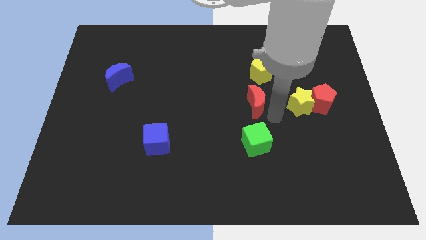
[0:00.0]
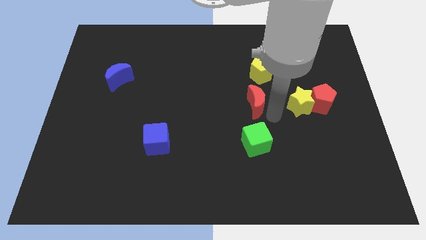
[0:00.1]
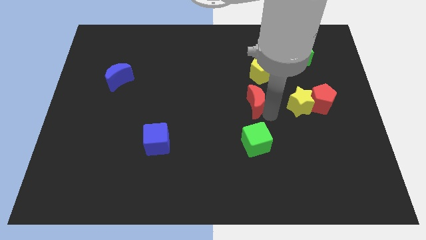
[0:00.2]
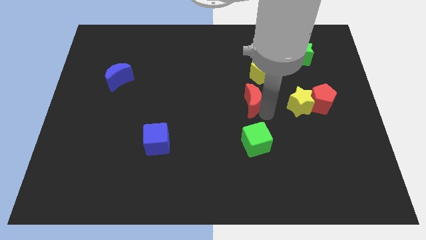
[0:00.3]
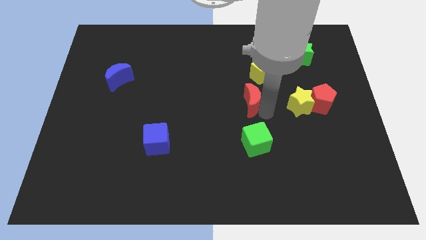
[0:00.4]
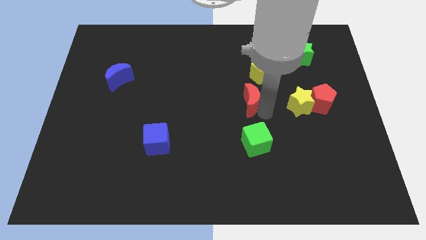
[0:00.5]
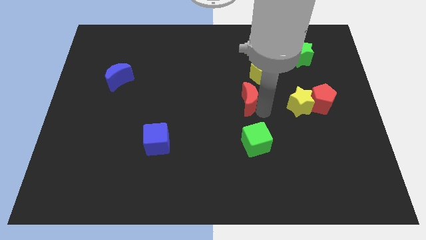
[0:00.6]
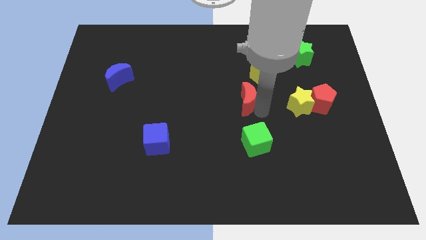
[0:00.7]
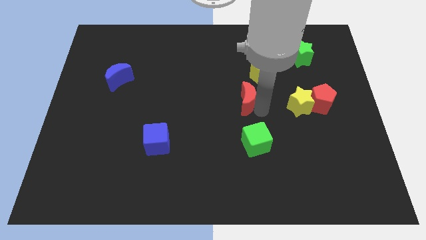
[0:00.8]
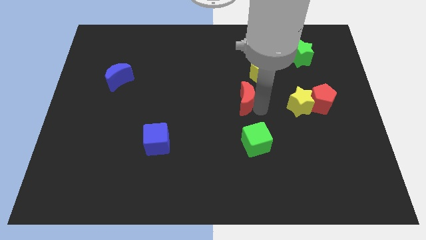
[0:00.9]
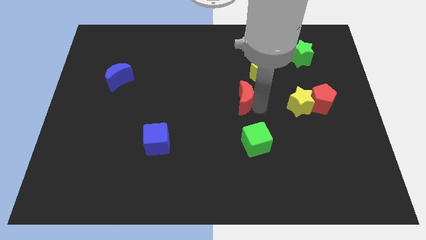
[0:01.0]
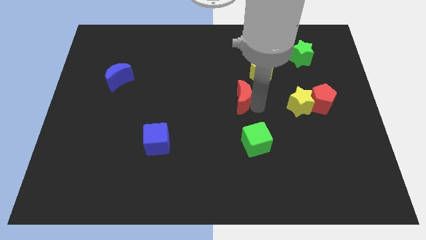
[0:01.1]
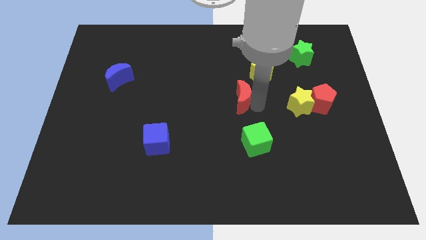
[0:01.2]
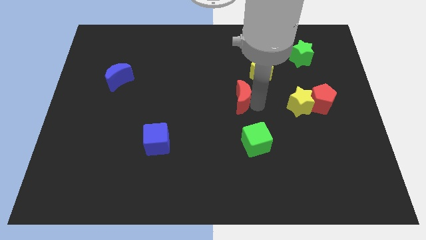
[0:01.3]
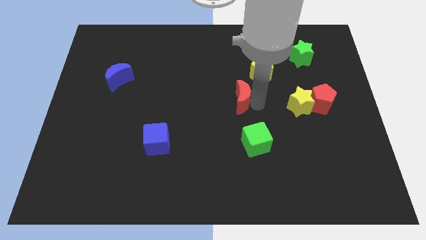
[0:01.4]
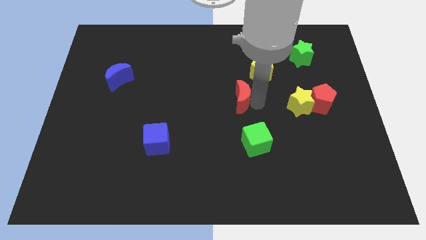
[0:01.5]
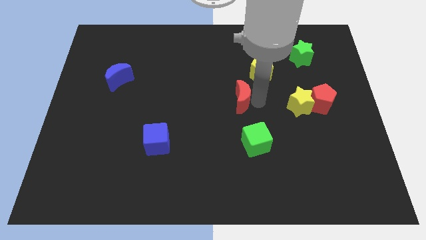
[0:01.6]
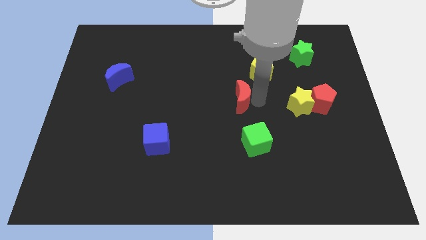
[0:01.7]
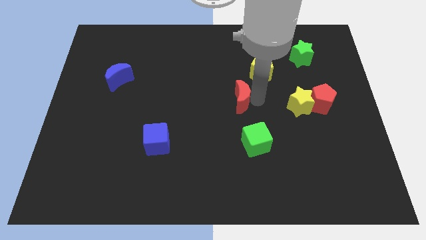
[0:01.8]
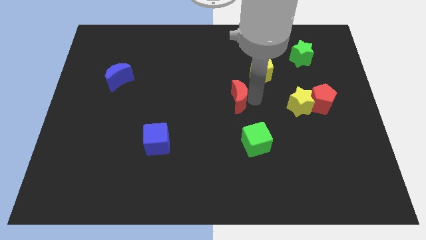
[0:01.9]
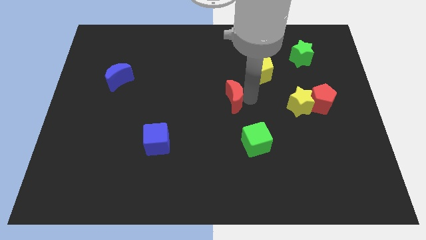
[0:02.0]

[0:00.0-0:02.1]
push the red moon slightly to the left side of the board

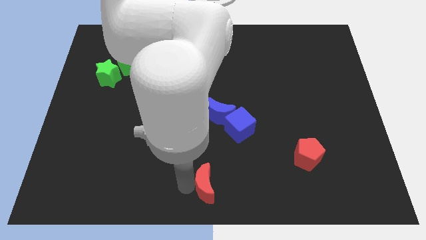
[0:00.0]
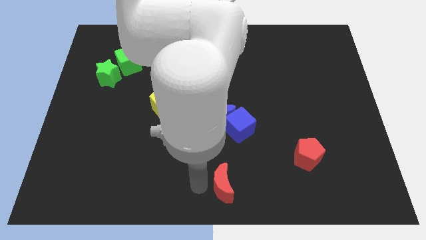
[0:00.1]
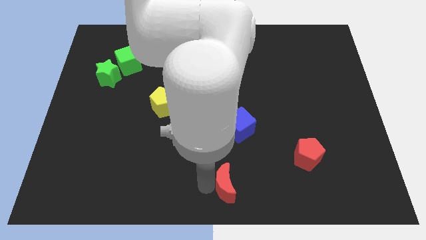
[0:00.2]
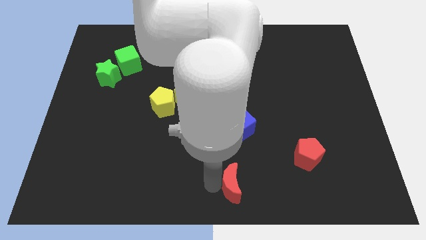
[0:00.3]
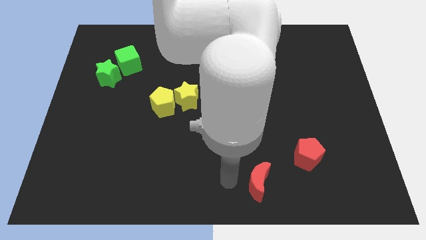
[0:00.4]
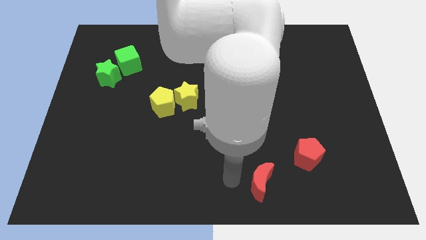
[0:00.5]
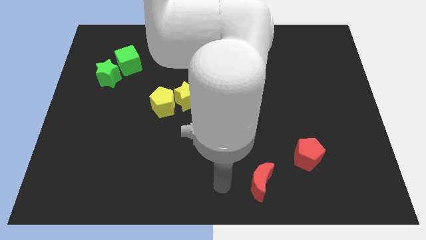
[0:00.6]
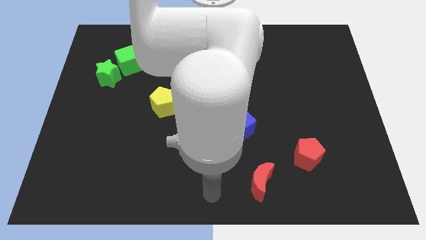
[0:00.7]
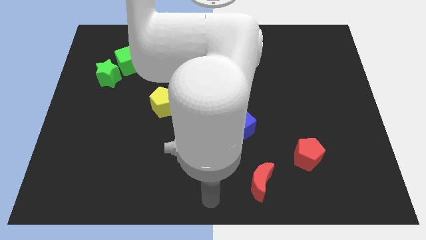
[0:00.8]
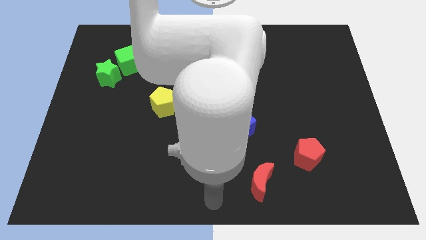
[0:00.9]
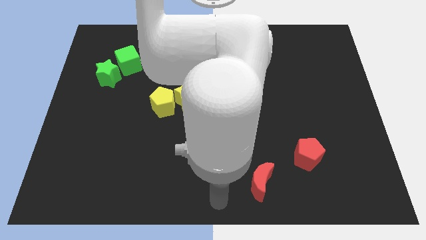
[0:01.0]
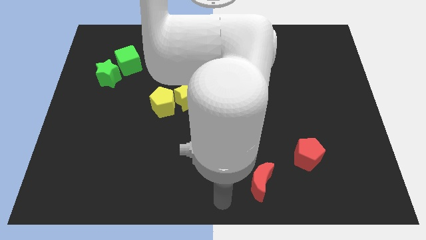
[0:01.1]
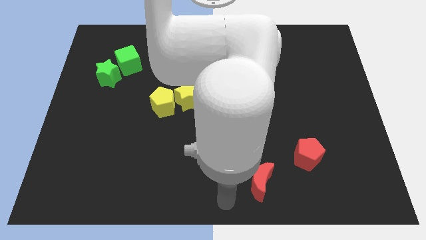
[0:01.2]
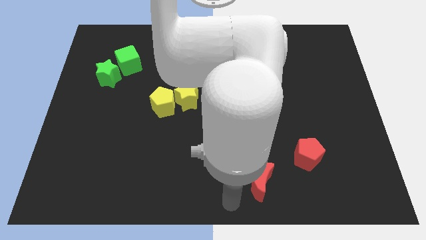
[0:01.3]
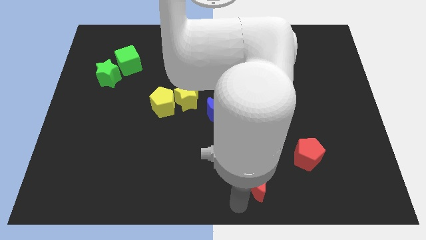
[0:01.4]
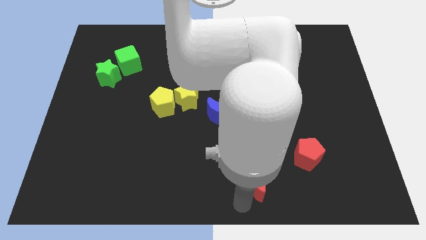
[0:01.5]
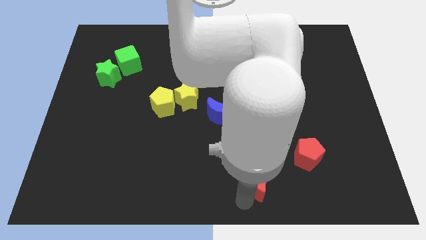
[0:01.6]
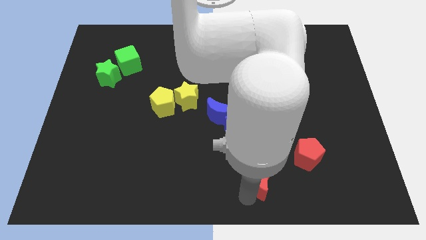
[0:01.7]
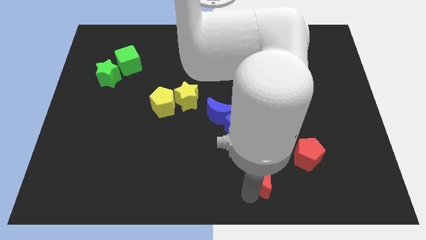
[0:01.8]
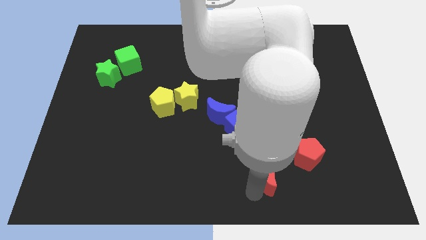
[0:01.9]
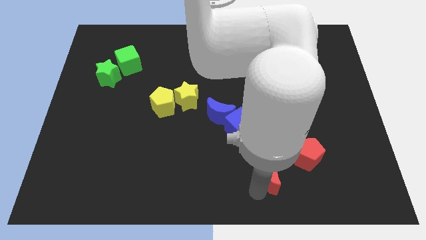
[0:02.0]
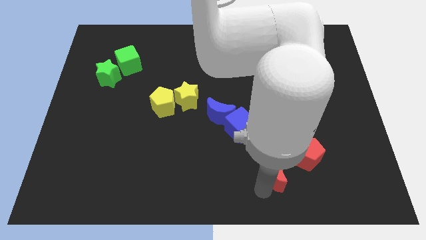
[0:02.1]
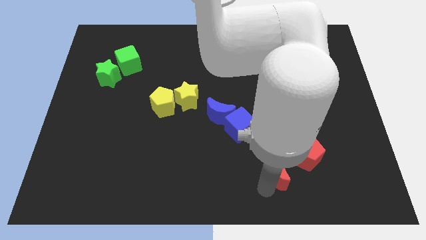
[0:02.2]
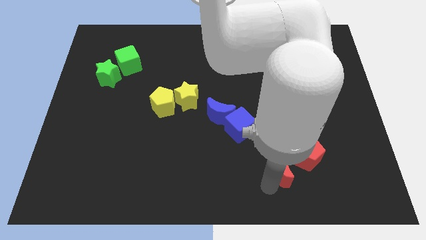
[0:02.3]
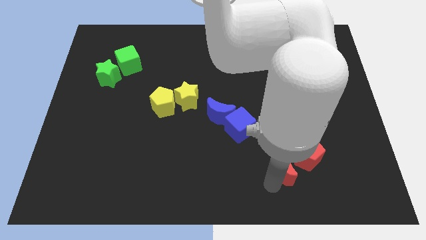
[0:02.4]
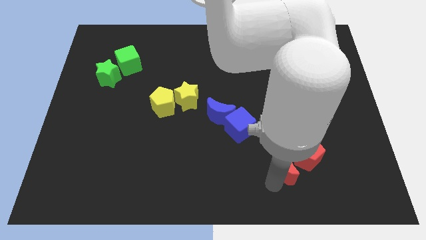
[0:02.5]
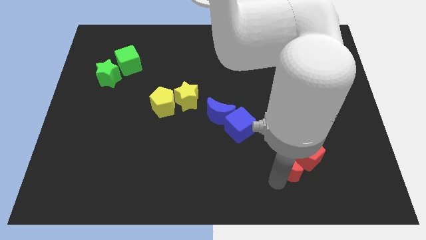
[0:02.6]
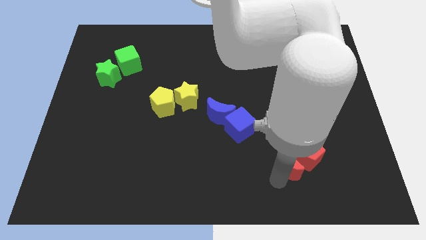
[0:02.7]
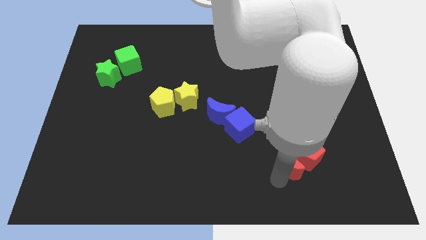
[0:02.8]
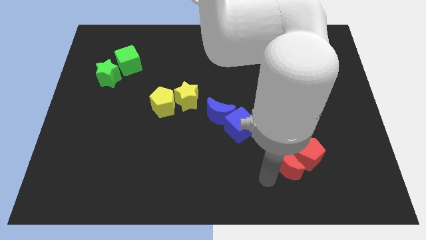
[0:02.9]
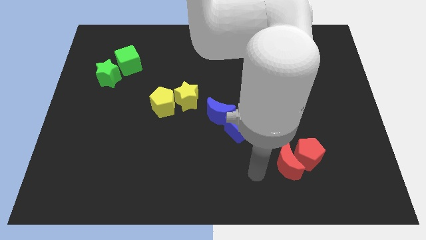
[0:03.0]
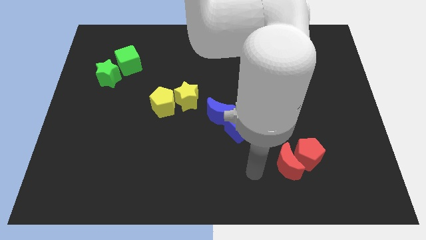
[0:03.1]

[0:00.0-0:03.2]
move red moon into red pentagon

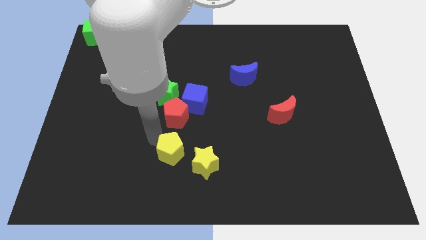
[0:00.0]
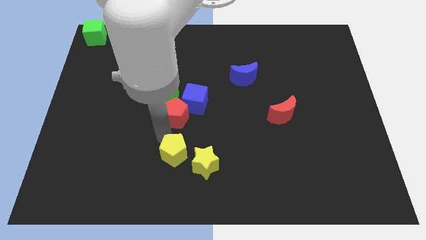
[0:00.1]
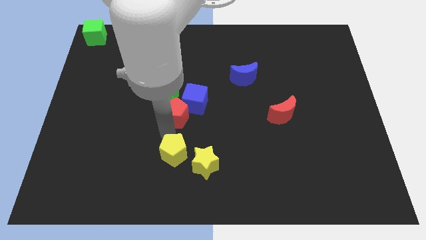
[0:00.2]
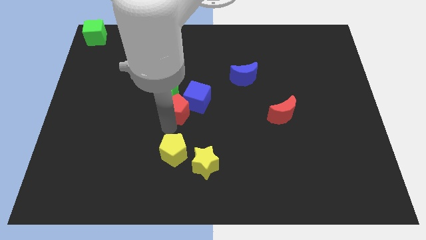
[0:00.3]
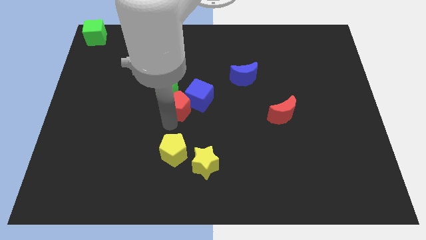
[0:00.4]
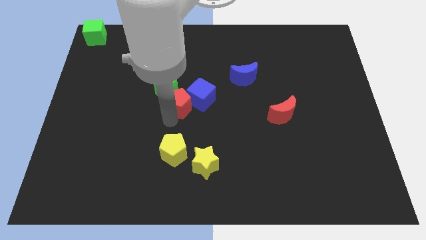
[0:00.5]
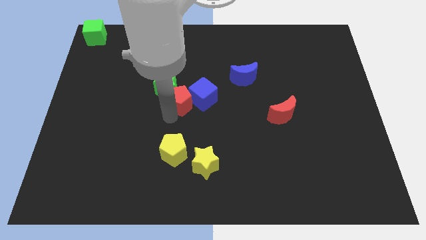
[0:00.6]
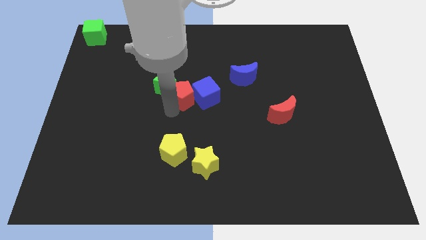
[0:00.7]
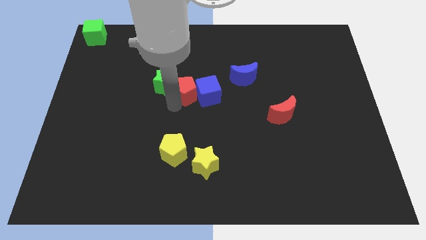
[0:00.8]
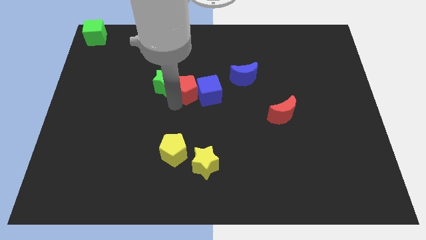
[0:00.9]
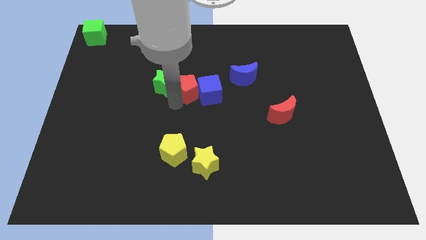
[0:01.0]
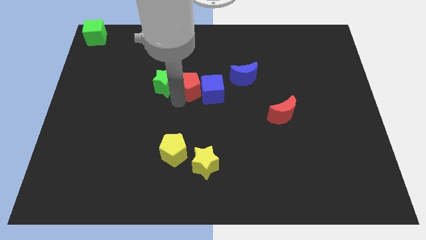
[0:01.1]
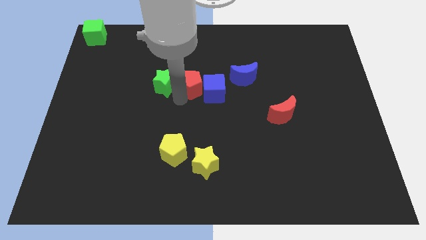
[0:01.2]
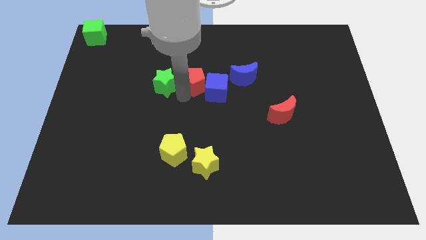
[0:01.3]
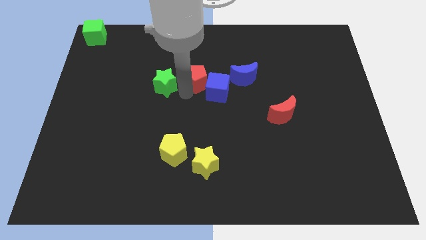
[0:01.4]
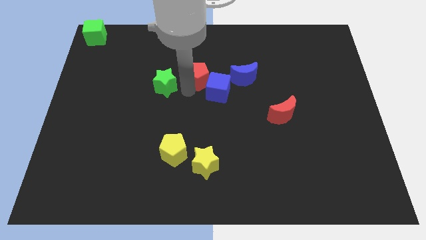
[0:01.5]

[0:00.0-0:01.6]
push the red pentagon into the green star and blue cube

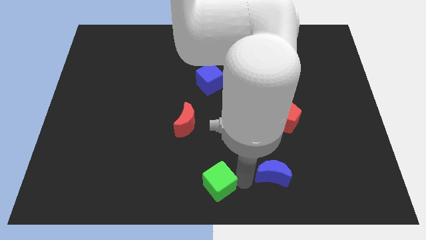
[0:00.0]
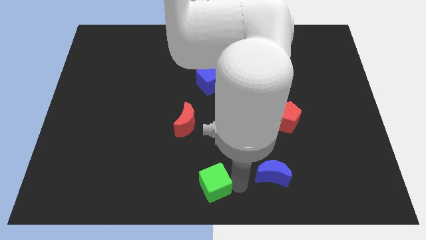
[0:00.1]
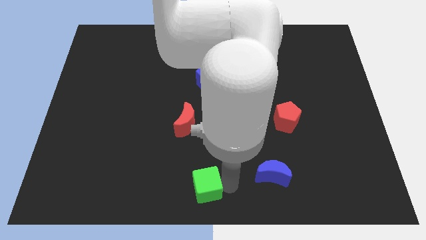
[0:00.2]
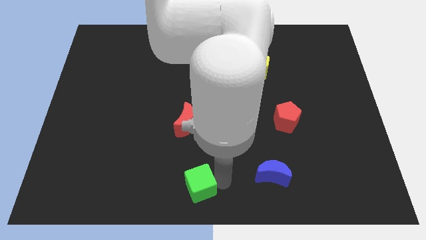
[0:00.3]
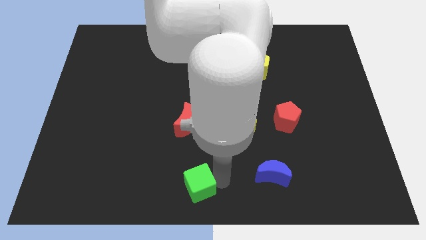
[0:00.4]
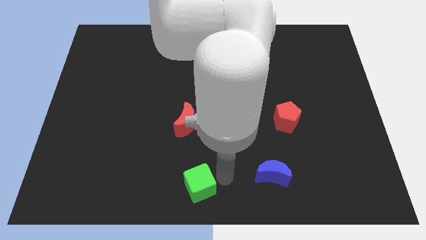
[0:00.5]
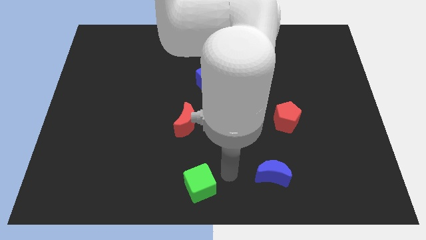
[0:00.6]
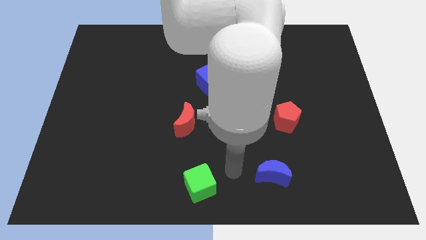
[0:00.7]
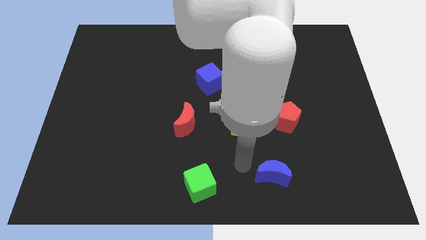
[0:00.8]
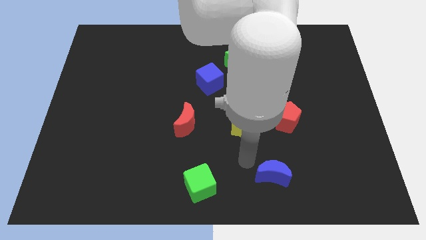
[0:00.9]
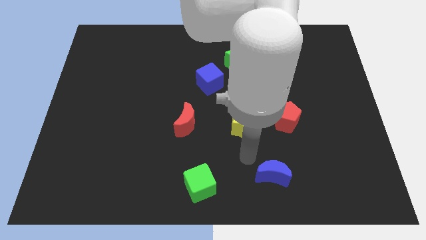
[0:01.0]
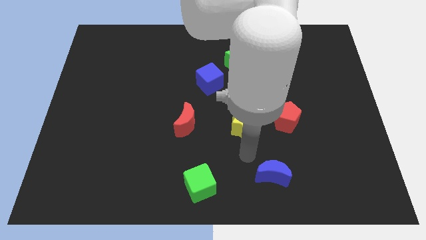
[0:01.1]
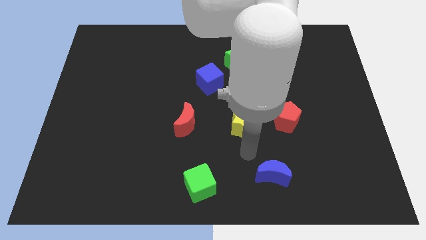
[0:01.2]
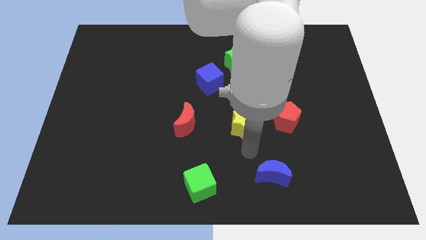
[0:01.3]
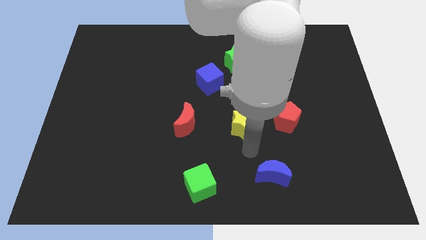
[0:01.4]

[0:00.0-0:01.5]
move the green cube to the left slightly

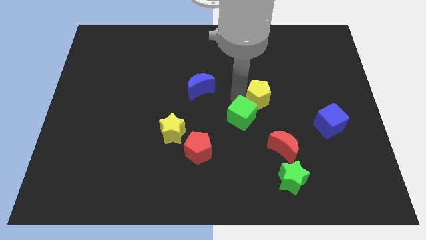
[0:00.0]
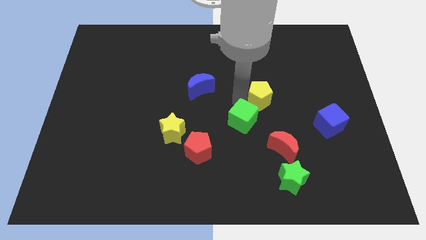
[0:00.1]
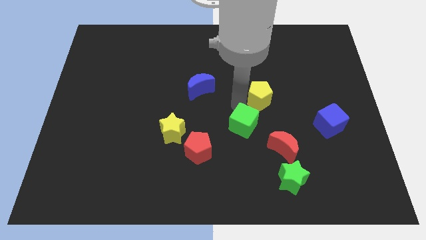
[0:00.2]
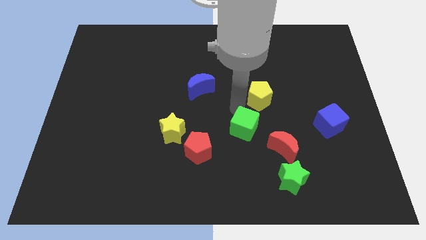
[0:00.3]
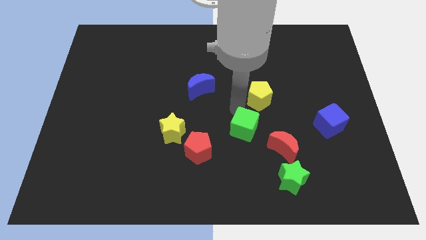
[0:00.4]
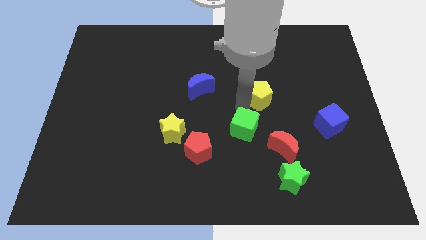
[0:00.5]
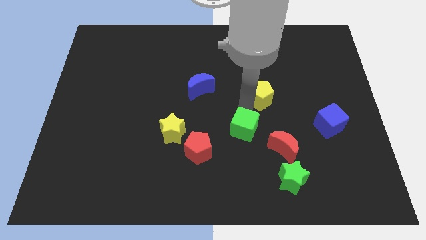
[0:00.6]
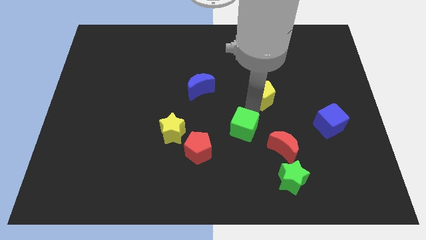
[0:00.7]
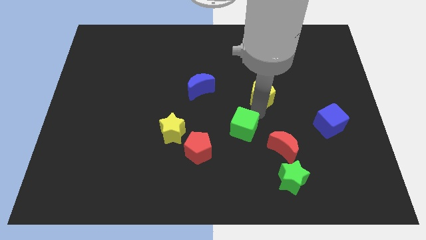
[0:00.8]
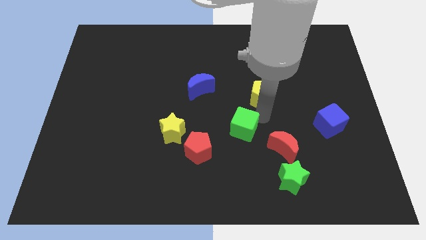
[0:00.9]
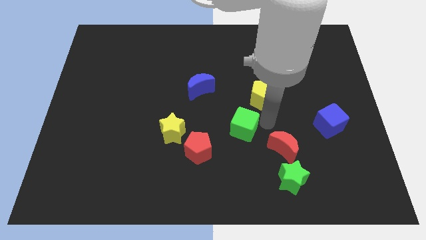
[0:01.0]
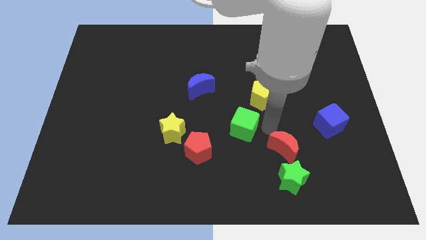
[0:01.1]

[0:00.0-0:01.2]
separate green cube and the yellow pentagon
